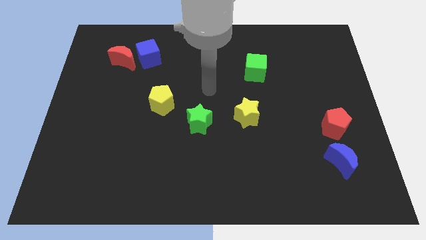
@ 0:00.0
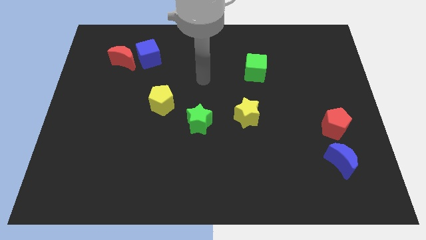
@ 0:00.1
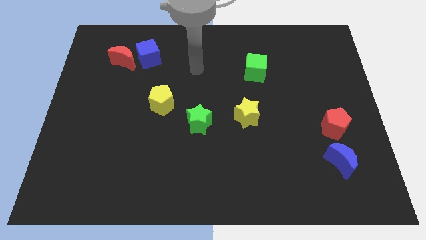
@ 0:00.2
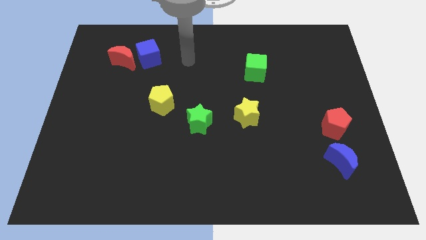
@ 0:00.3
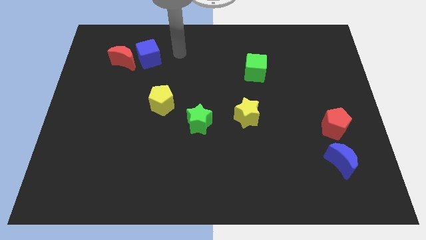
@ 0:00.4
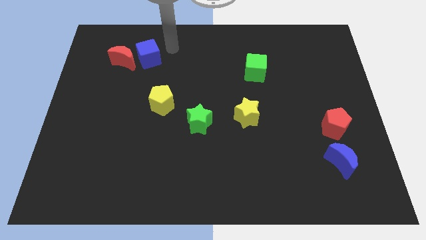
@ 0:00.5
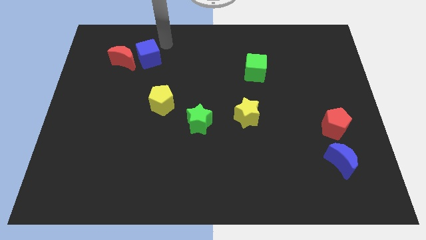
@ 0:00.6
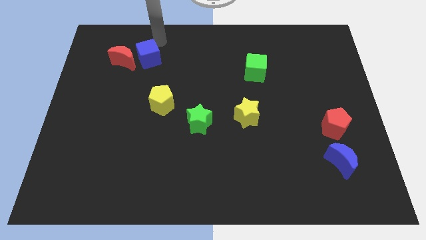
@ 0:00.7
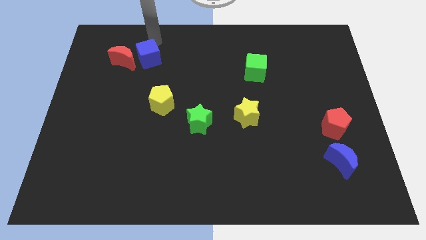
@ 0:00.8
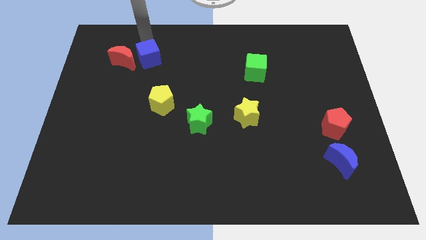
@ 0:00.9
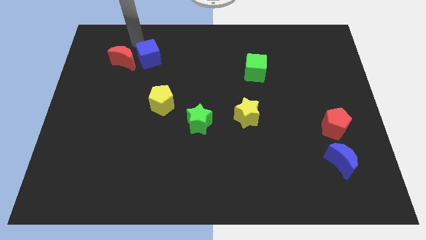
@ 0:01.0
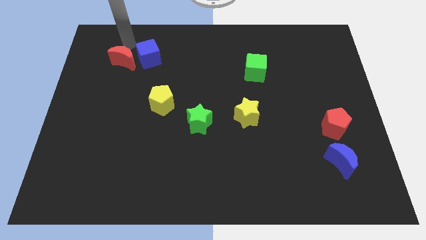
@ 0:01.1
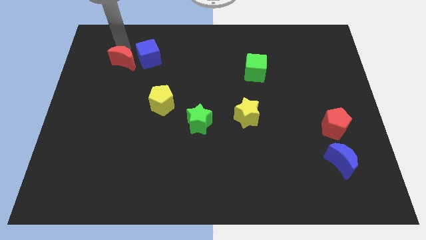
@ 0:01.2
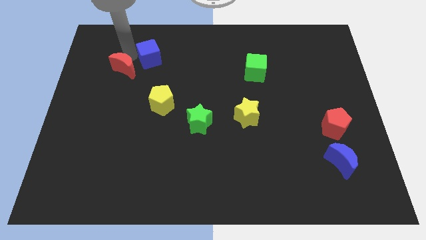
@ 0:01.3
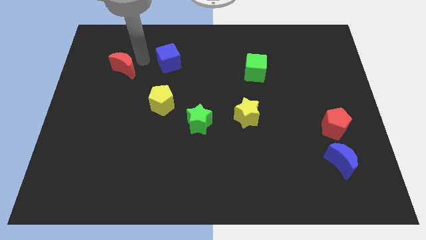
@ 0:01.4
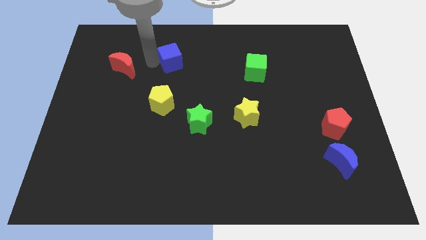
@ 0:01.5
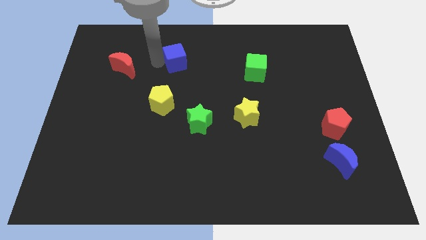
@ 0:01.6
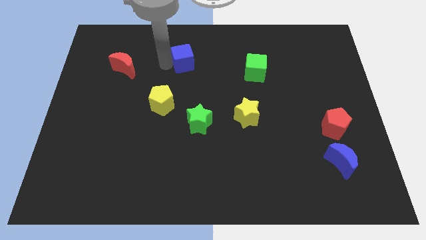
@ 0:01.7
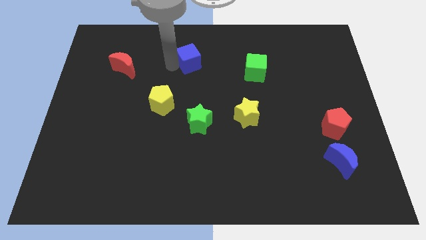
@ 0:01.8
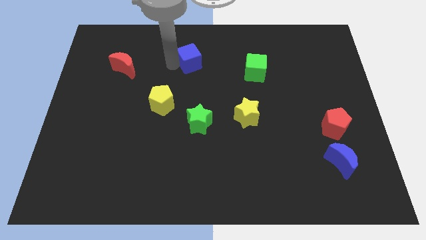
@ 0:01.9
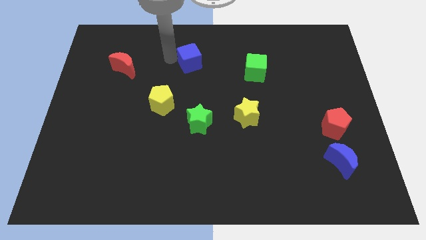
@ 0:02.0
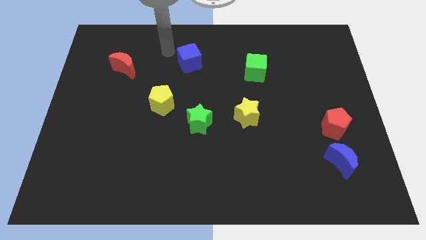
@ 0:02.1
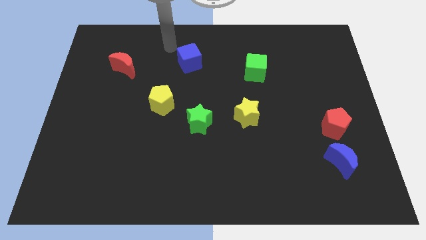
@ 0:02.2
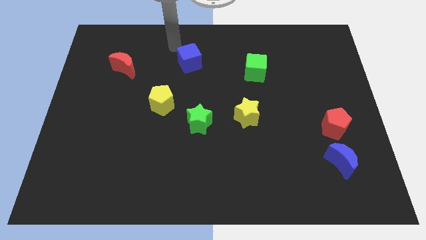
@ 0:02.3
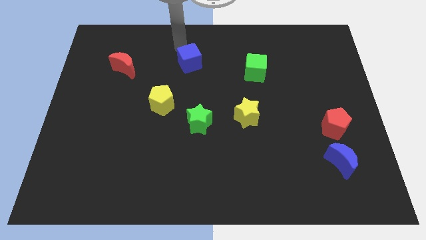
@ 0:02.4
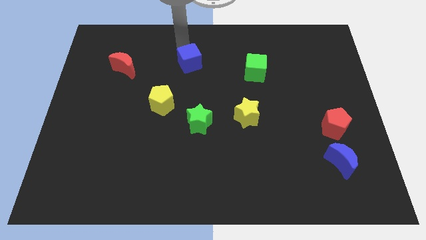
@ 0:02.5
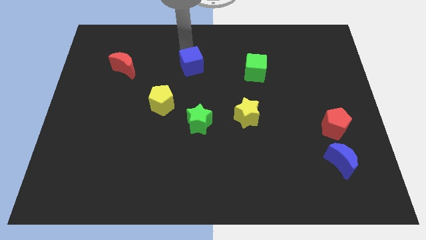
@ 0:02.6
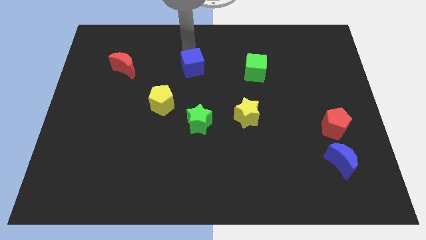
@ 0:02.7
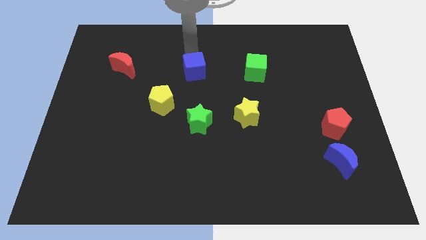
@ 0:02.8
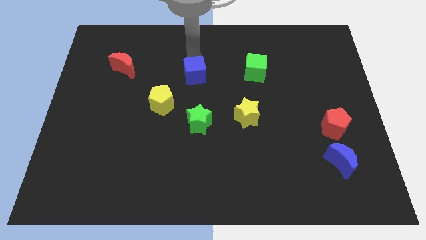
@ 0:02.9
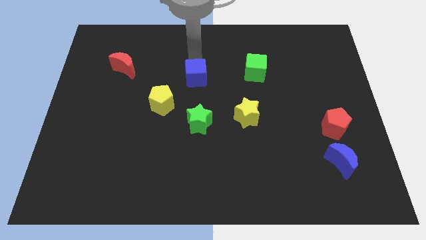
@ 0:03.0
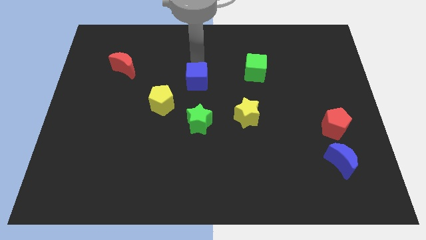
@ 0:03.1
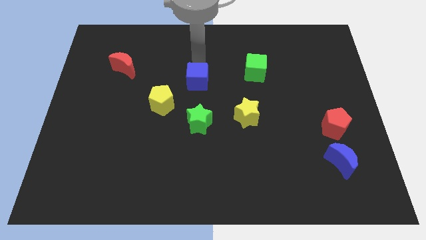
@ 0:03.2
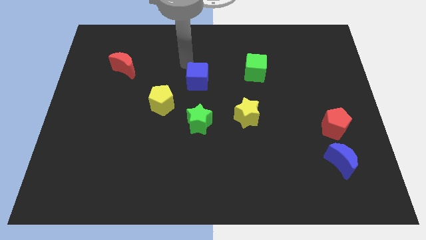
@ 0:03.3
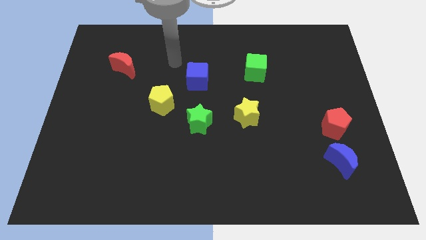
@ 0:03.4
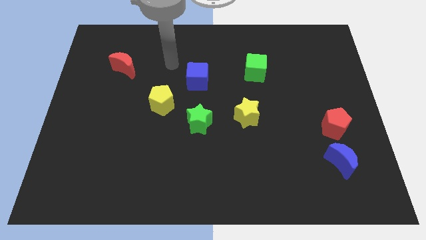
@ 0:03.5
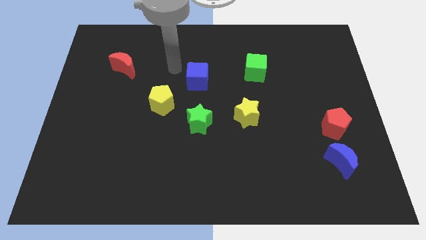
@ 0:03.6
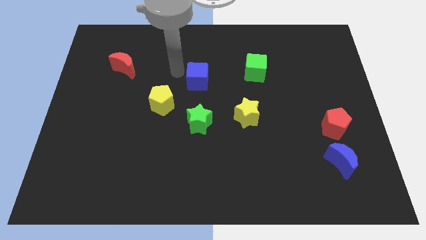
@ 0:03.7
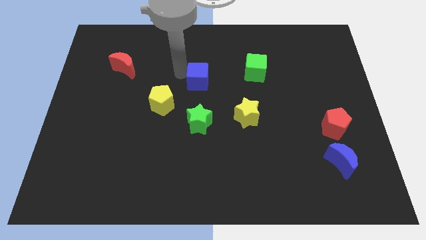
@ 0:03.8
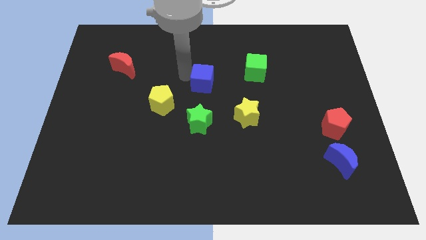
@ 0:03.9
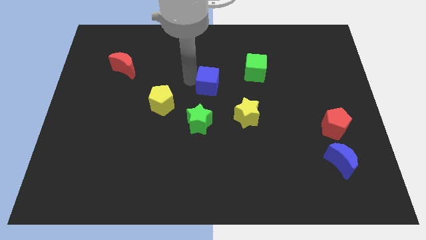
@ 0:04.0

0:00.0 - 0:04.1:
push the blue cube to the top of the green star

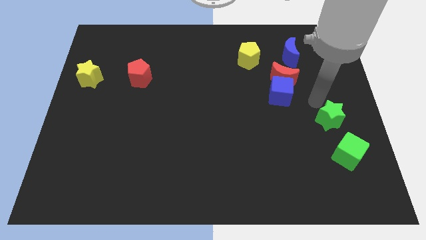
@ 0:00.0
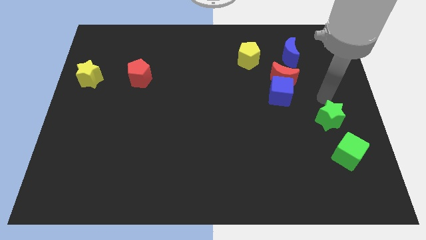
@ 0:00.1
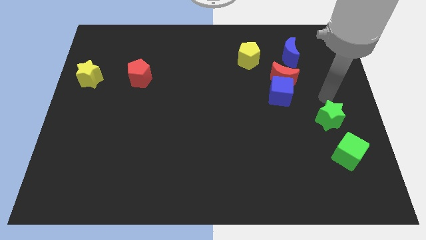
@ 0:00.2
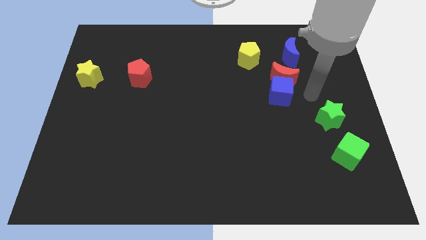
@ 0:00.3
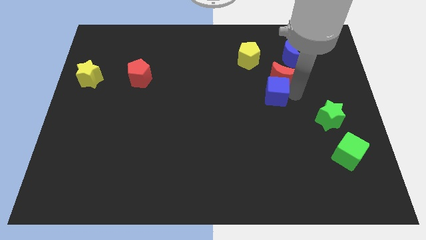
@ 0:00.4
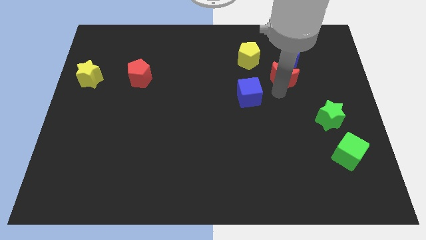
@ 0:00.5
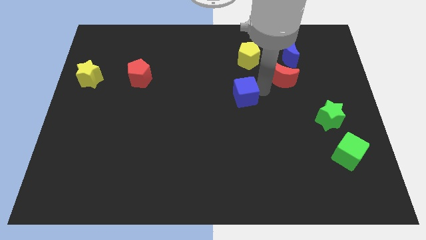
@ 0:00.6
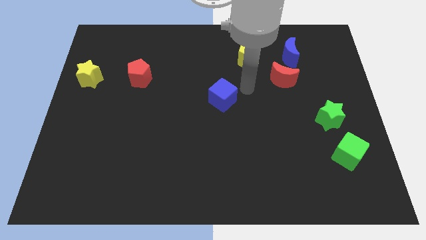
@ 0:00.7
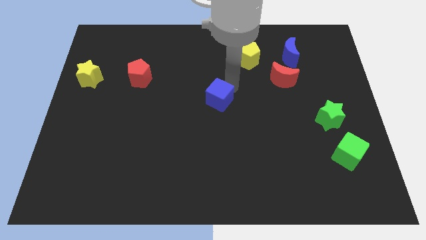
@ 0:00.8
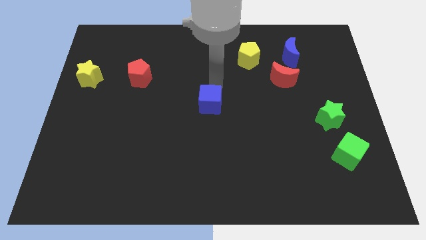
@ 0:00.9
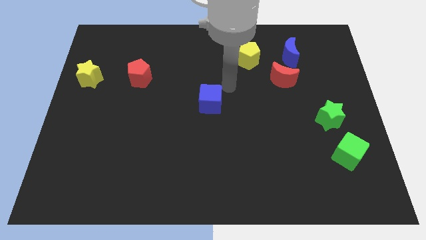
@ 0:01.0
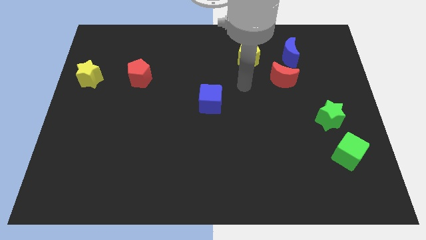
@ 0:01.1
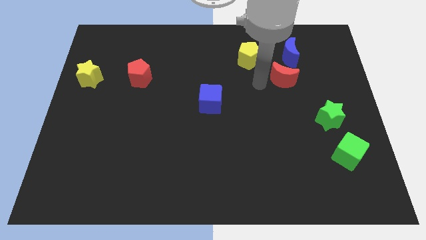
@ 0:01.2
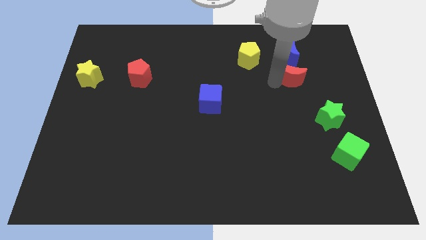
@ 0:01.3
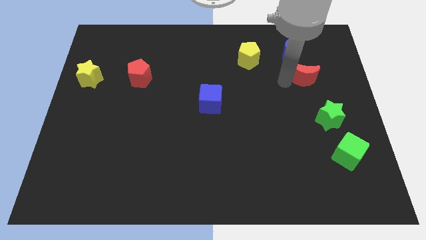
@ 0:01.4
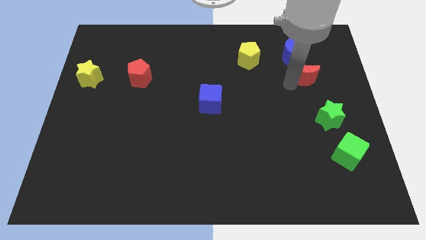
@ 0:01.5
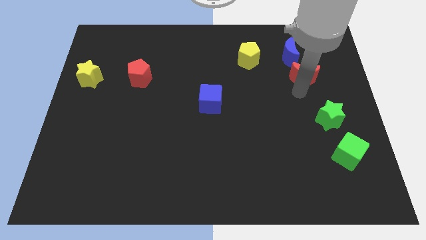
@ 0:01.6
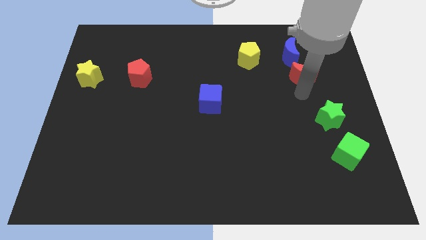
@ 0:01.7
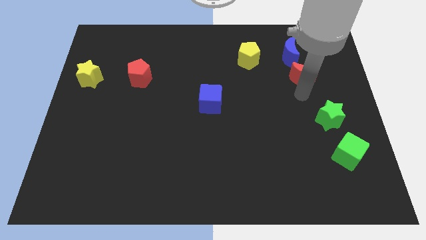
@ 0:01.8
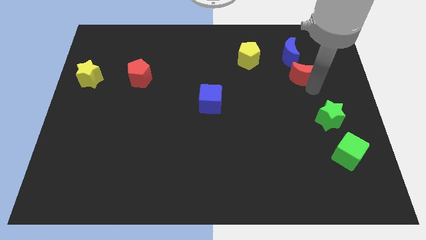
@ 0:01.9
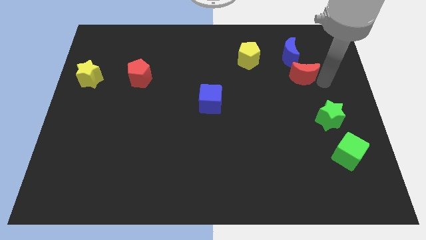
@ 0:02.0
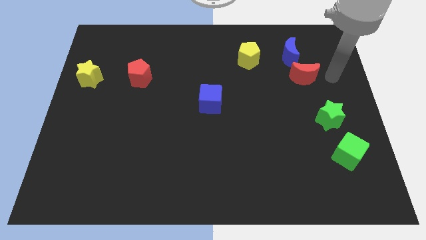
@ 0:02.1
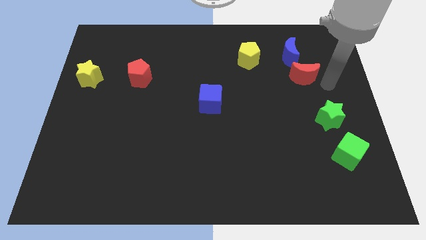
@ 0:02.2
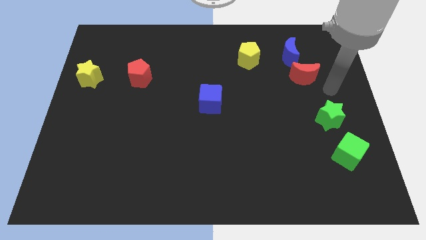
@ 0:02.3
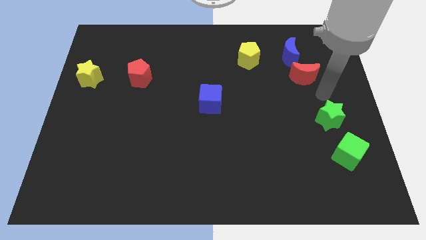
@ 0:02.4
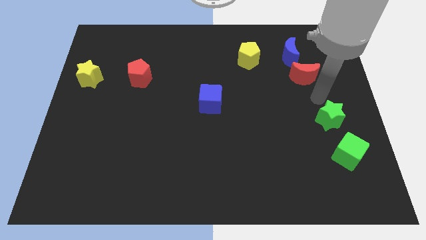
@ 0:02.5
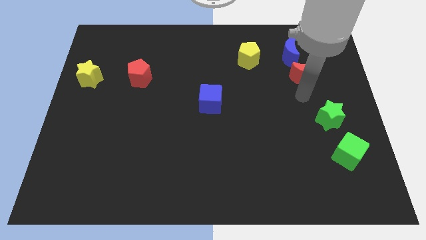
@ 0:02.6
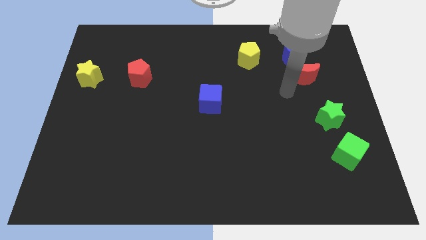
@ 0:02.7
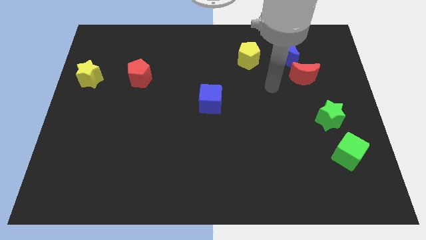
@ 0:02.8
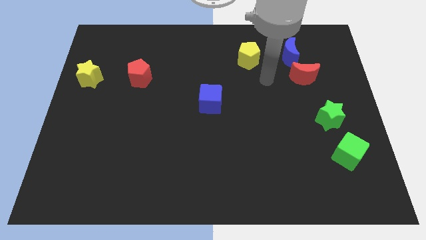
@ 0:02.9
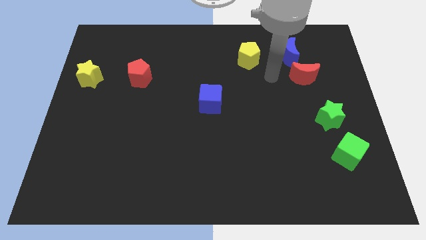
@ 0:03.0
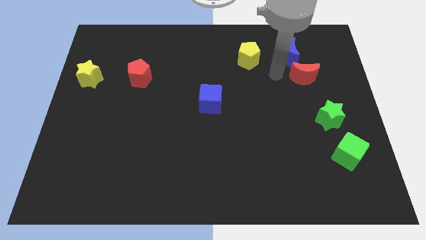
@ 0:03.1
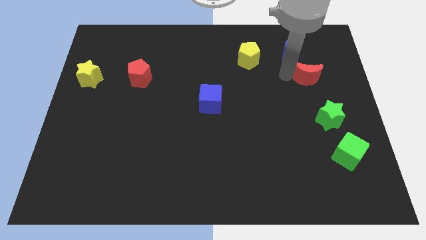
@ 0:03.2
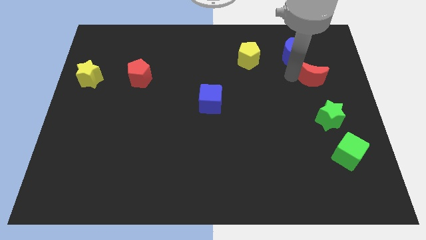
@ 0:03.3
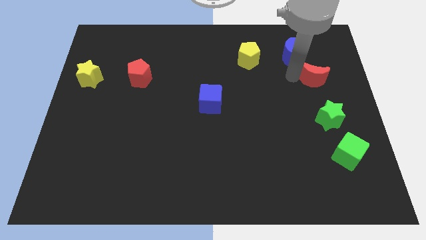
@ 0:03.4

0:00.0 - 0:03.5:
separate blue cube and red crescent

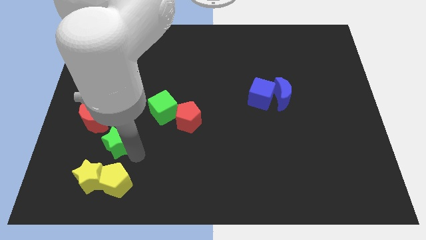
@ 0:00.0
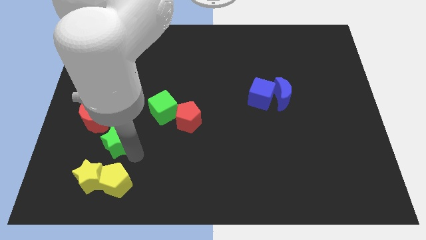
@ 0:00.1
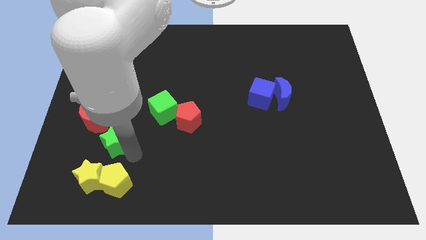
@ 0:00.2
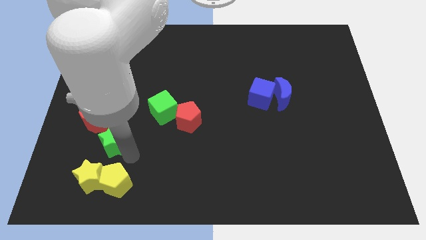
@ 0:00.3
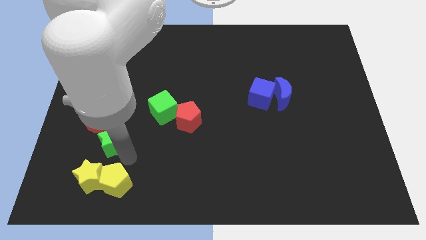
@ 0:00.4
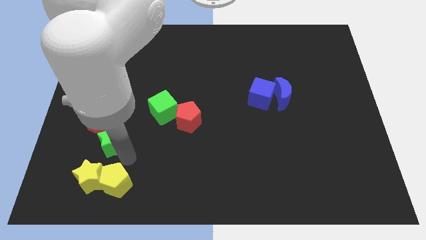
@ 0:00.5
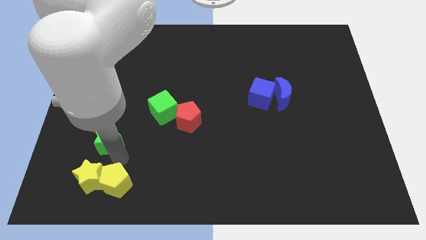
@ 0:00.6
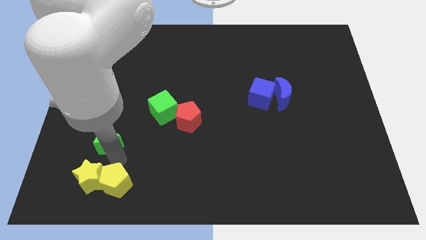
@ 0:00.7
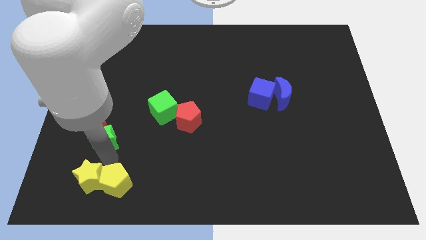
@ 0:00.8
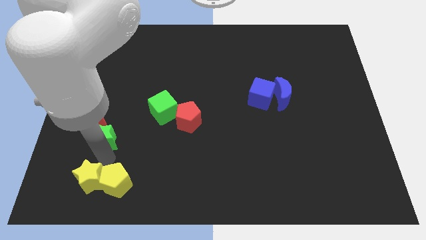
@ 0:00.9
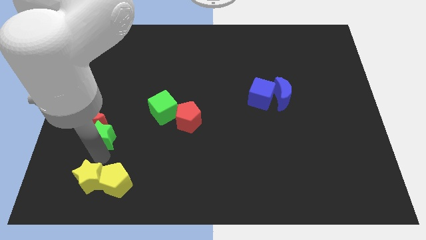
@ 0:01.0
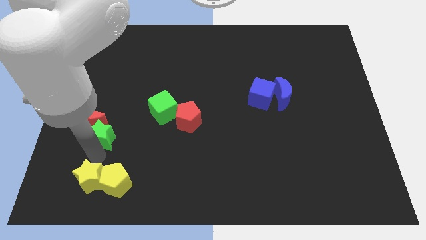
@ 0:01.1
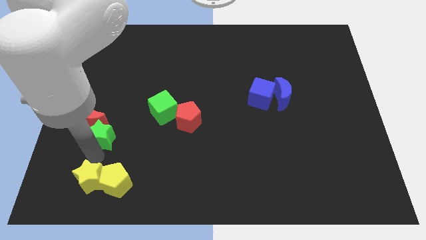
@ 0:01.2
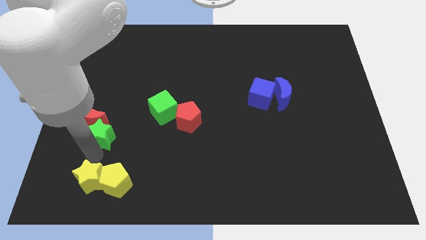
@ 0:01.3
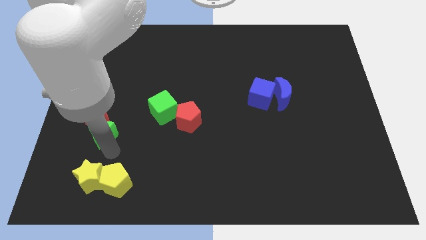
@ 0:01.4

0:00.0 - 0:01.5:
move the green star into the red moon

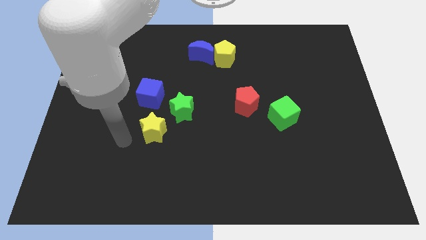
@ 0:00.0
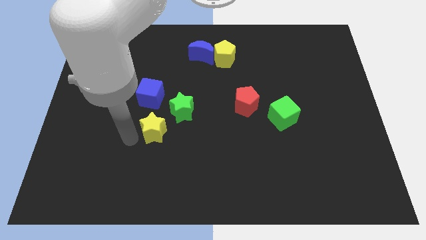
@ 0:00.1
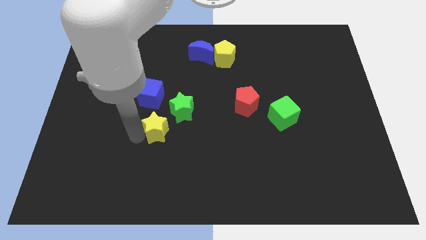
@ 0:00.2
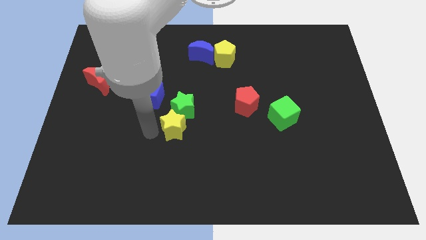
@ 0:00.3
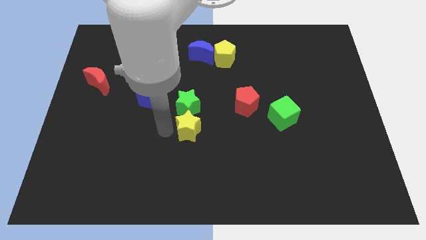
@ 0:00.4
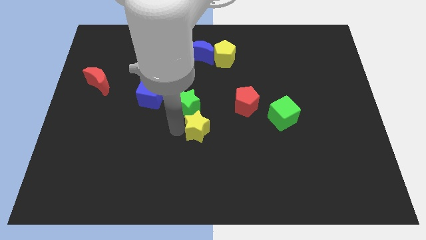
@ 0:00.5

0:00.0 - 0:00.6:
place yellow star below green star
